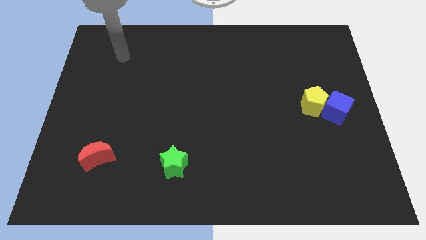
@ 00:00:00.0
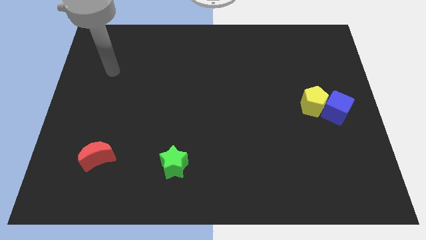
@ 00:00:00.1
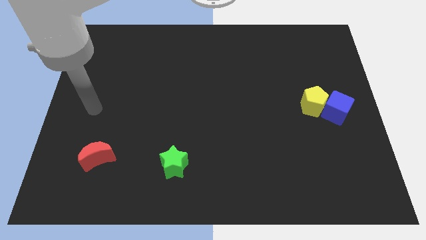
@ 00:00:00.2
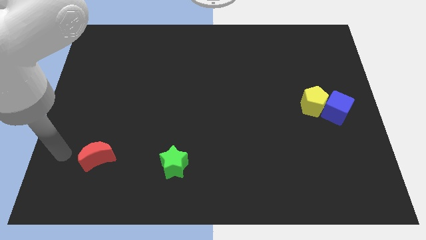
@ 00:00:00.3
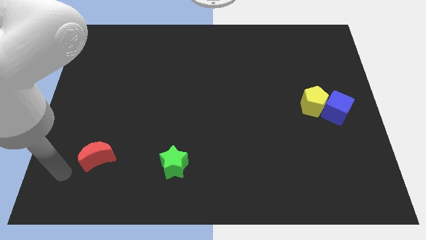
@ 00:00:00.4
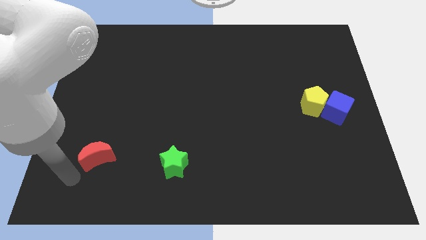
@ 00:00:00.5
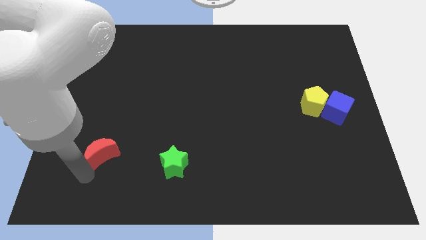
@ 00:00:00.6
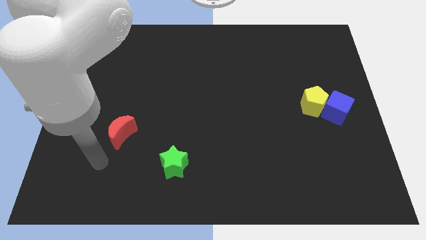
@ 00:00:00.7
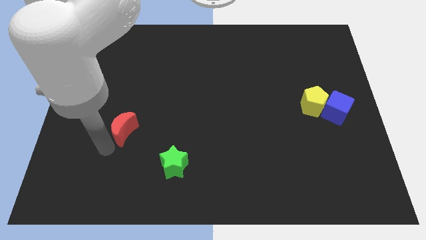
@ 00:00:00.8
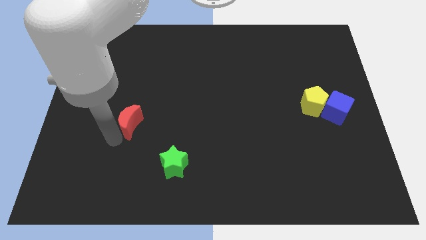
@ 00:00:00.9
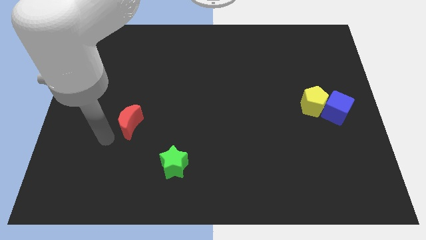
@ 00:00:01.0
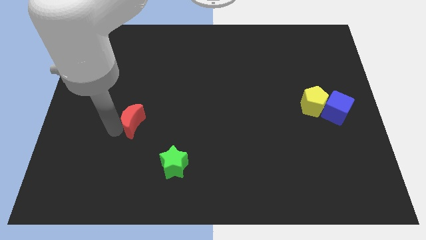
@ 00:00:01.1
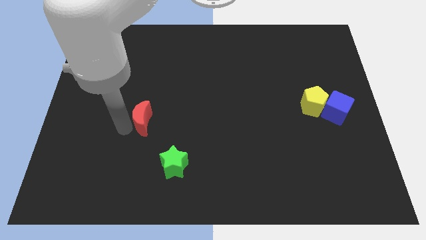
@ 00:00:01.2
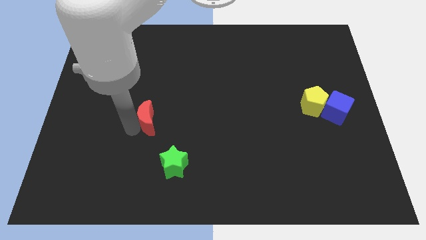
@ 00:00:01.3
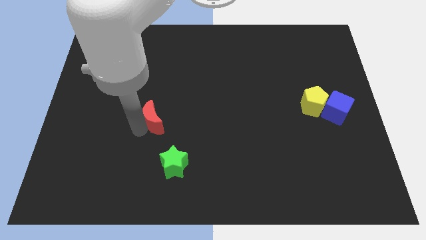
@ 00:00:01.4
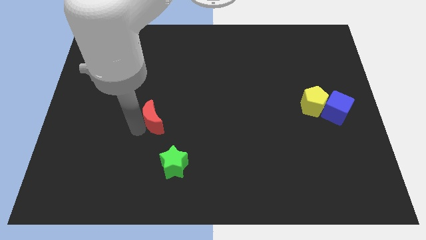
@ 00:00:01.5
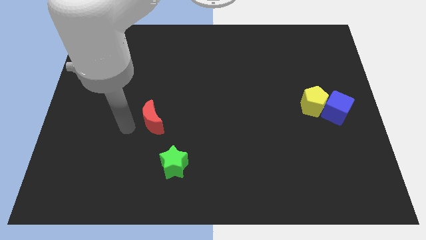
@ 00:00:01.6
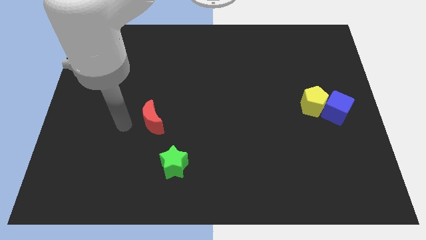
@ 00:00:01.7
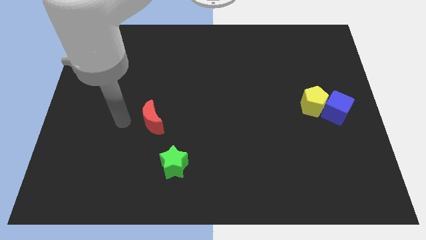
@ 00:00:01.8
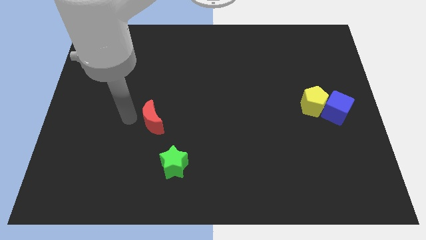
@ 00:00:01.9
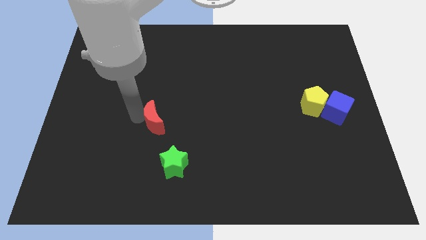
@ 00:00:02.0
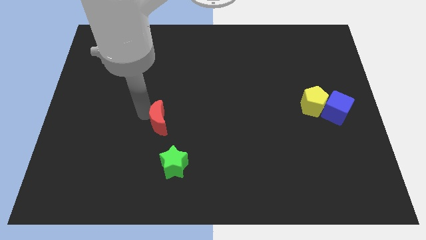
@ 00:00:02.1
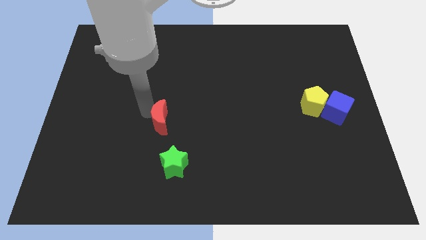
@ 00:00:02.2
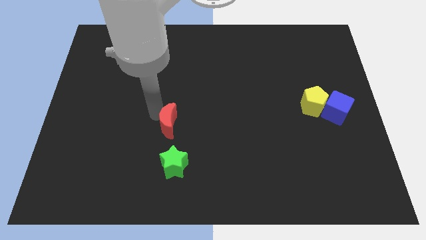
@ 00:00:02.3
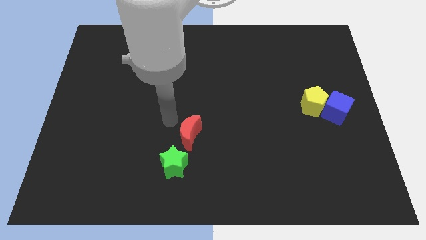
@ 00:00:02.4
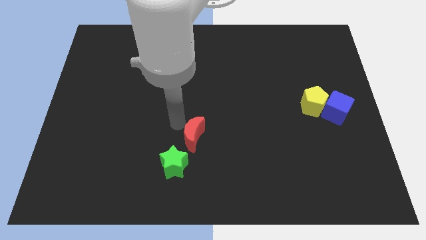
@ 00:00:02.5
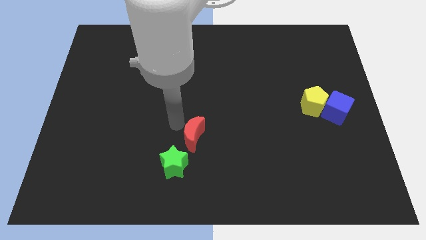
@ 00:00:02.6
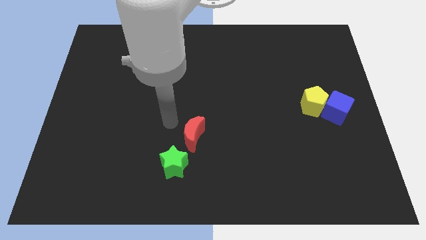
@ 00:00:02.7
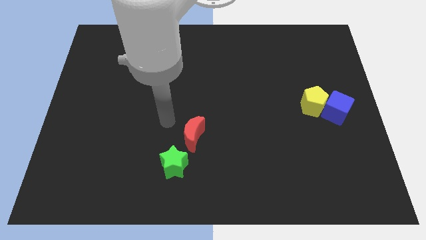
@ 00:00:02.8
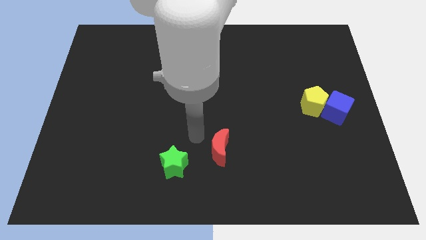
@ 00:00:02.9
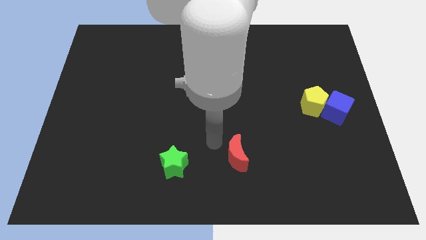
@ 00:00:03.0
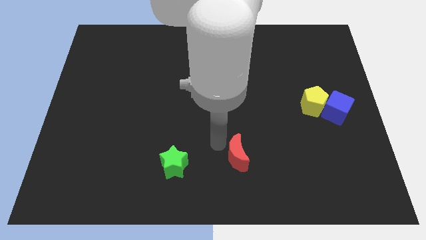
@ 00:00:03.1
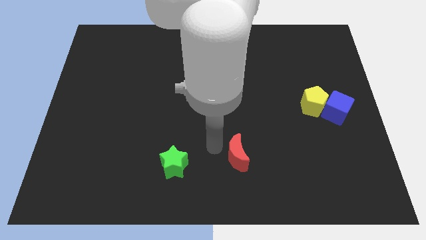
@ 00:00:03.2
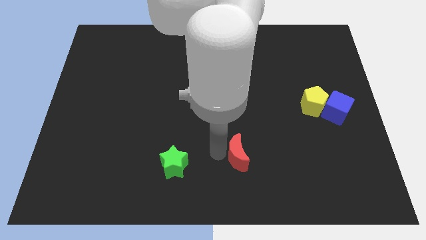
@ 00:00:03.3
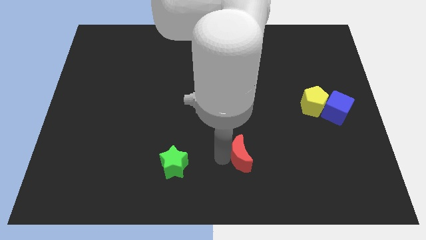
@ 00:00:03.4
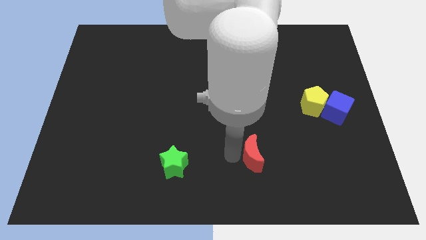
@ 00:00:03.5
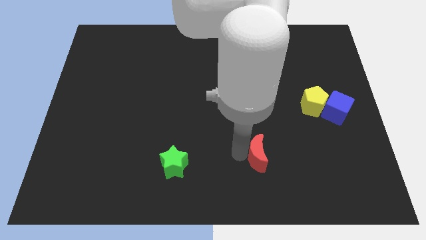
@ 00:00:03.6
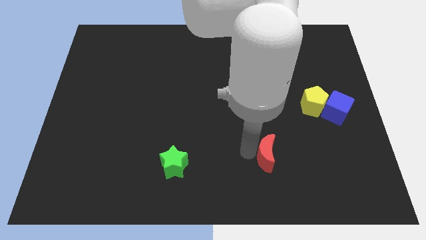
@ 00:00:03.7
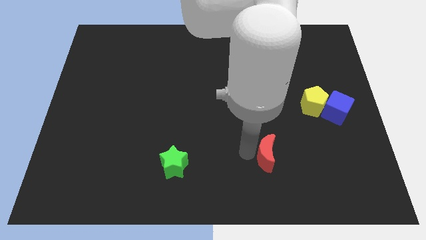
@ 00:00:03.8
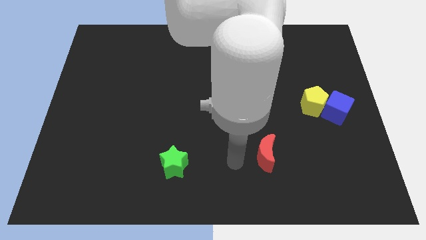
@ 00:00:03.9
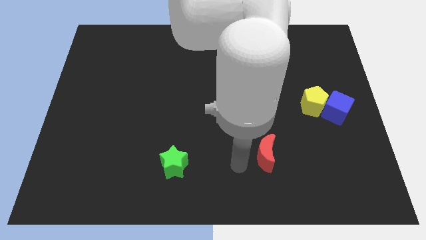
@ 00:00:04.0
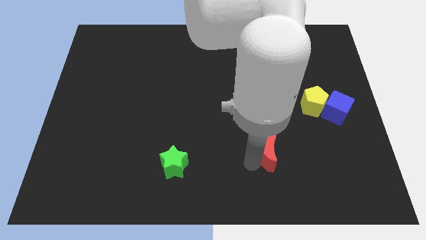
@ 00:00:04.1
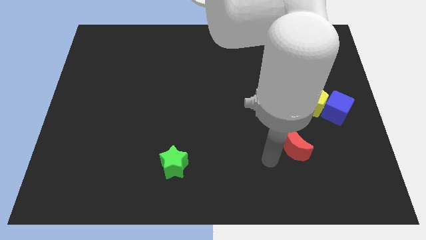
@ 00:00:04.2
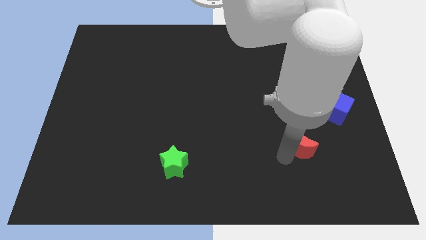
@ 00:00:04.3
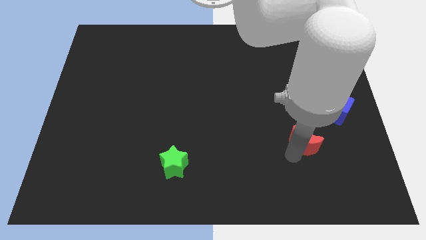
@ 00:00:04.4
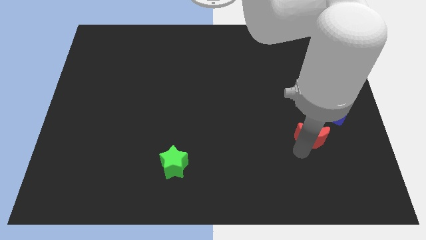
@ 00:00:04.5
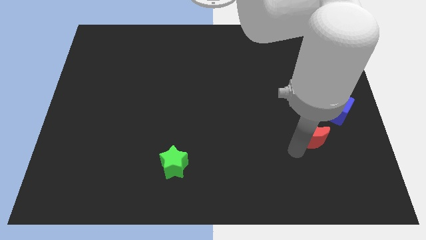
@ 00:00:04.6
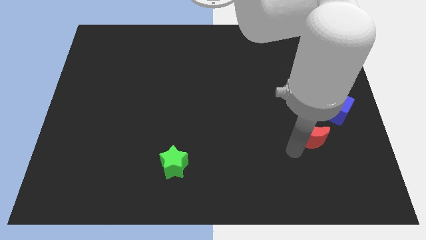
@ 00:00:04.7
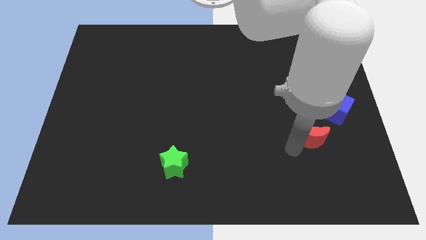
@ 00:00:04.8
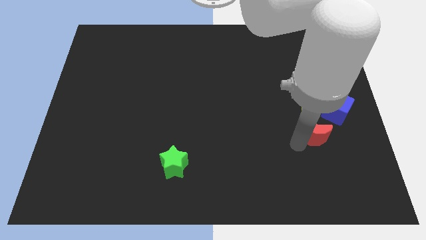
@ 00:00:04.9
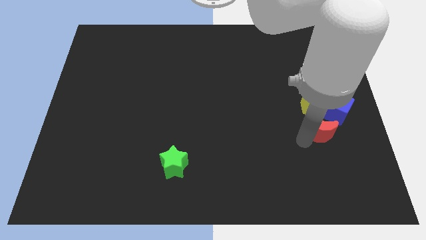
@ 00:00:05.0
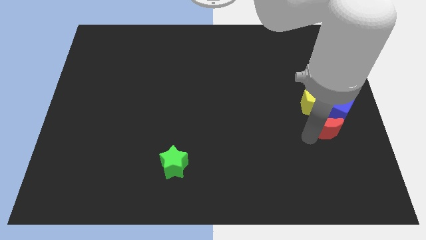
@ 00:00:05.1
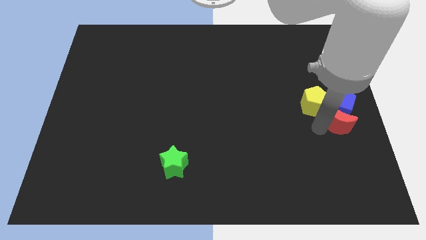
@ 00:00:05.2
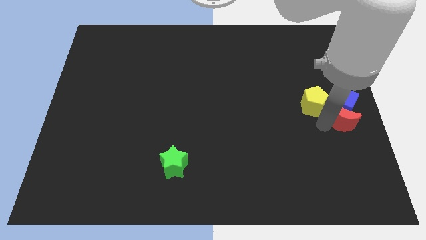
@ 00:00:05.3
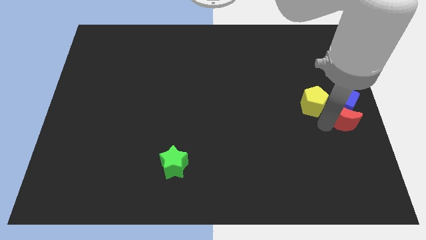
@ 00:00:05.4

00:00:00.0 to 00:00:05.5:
push the red moon to the cube

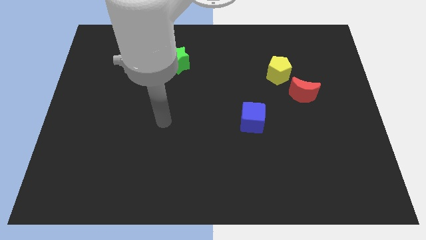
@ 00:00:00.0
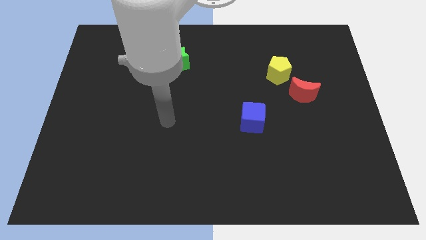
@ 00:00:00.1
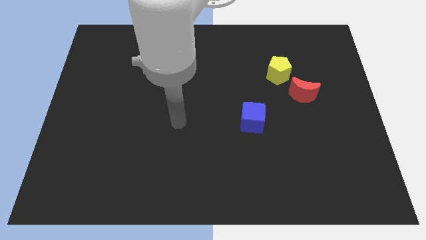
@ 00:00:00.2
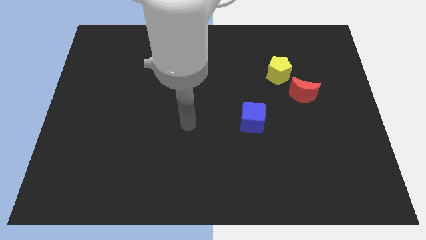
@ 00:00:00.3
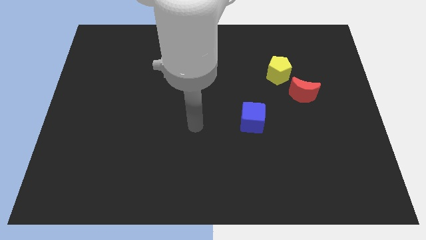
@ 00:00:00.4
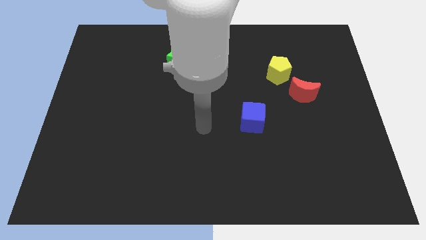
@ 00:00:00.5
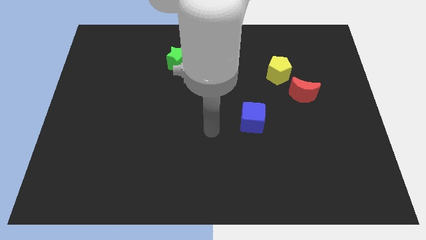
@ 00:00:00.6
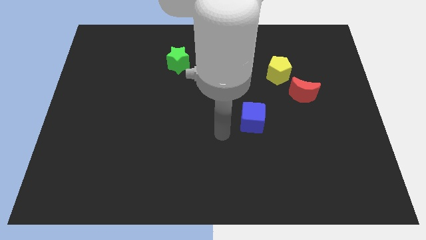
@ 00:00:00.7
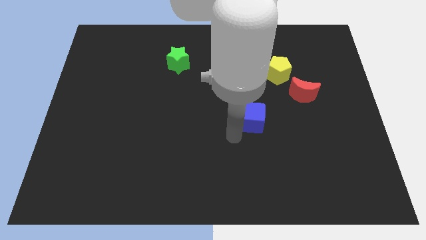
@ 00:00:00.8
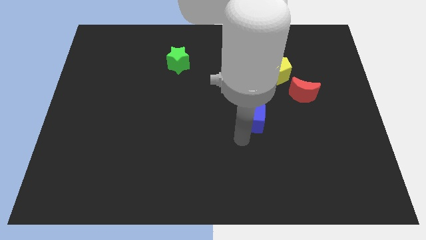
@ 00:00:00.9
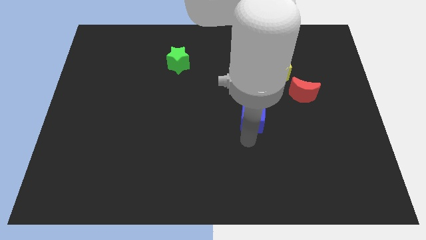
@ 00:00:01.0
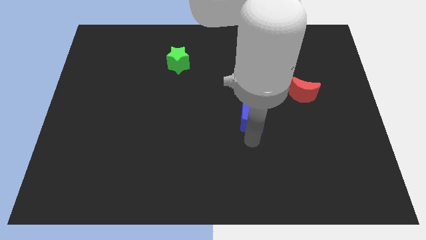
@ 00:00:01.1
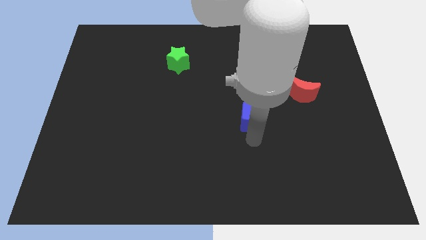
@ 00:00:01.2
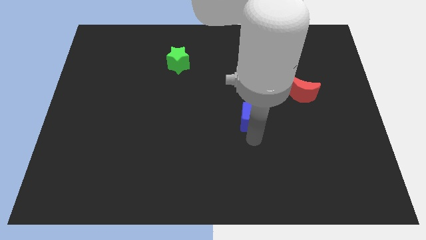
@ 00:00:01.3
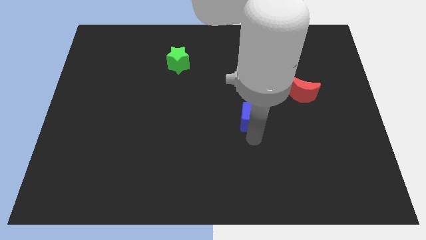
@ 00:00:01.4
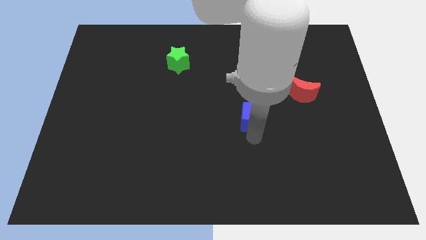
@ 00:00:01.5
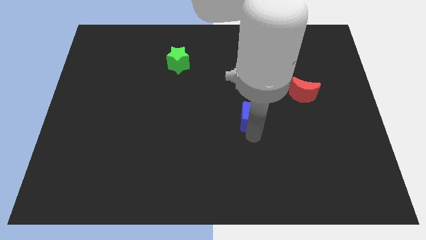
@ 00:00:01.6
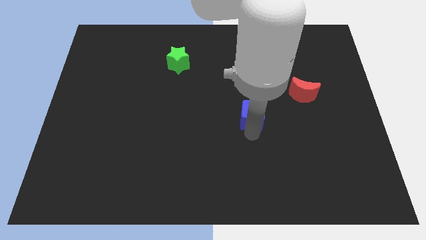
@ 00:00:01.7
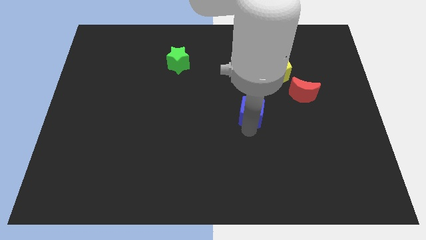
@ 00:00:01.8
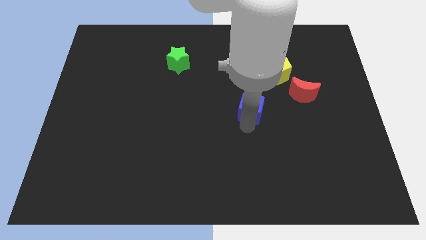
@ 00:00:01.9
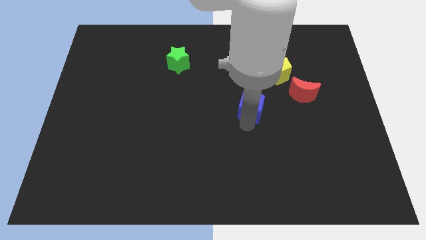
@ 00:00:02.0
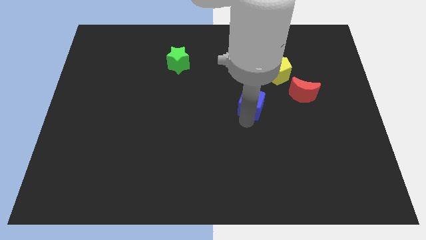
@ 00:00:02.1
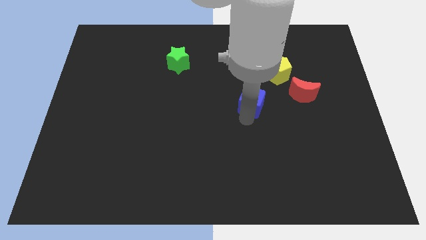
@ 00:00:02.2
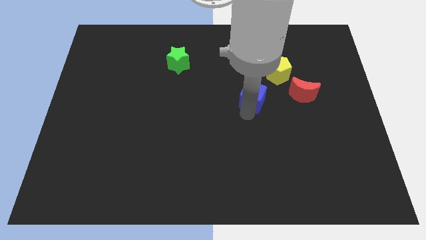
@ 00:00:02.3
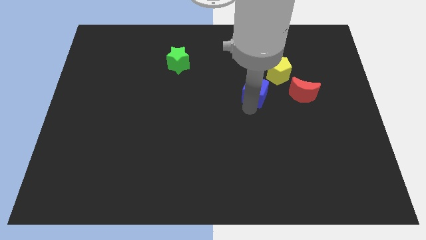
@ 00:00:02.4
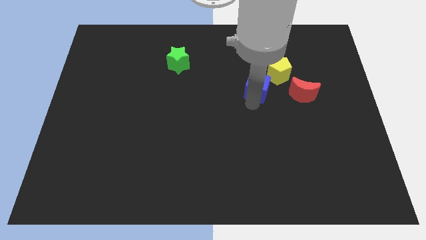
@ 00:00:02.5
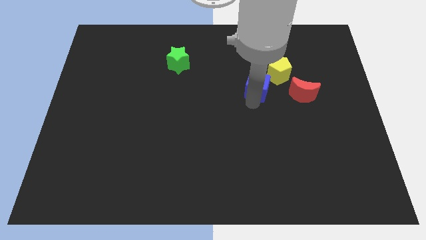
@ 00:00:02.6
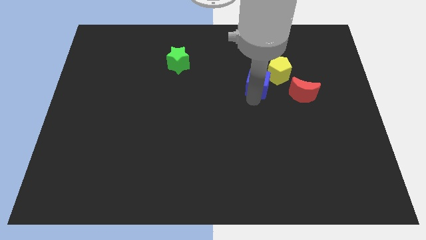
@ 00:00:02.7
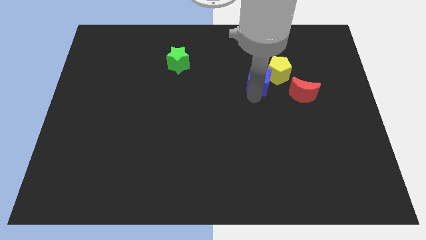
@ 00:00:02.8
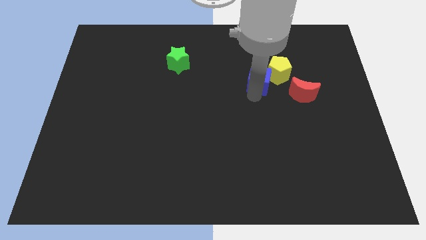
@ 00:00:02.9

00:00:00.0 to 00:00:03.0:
slide the blue block to the pentagon
